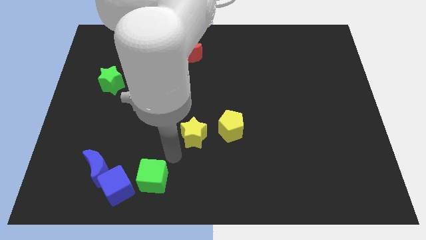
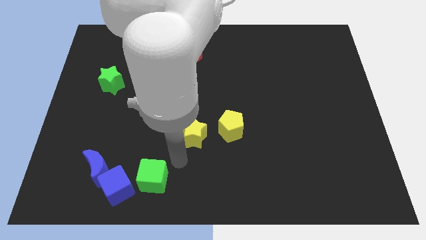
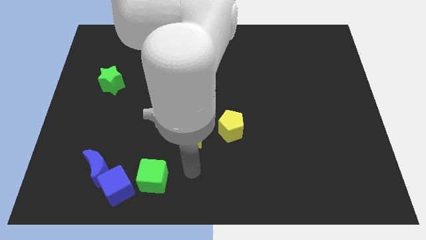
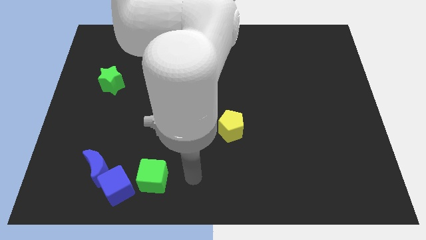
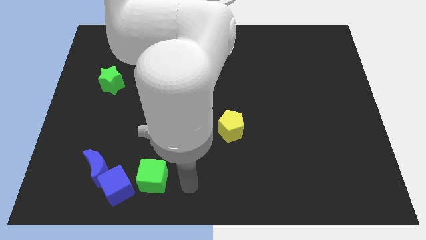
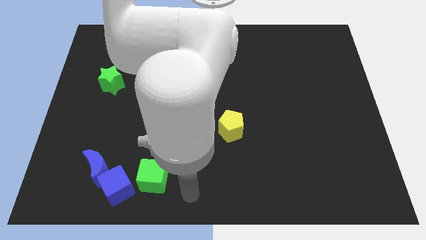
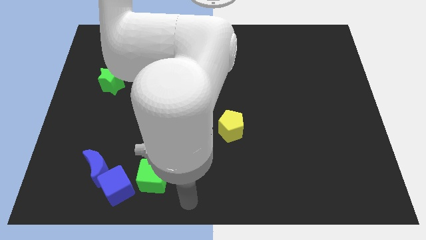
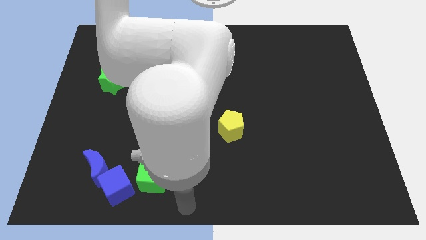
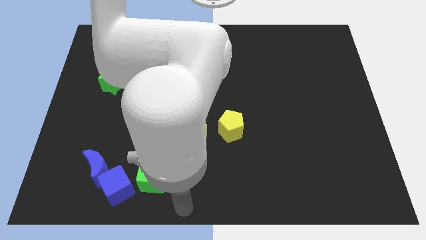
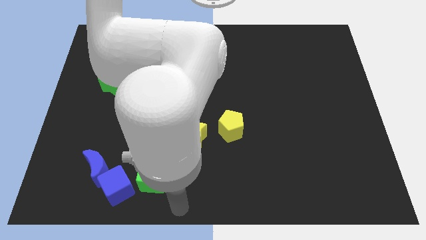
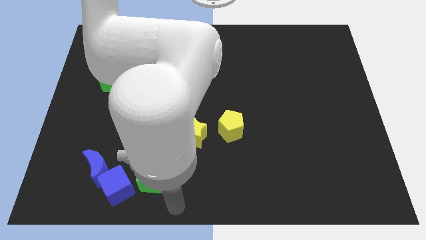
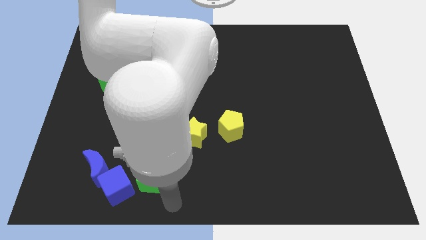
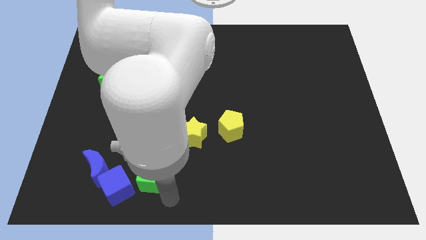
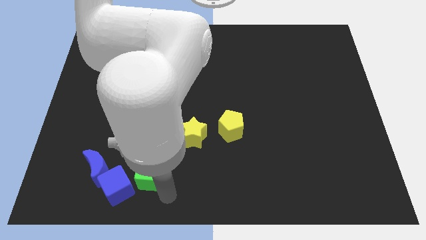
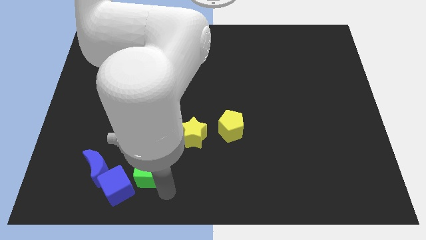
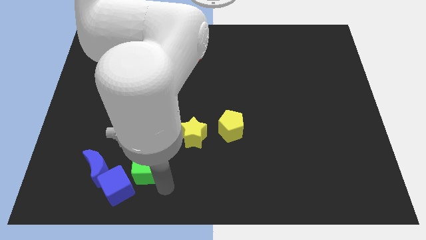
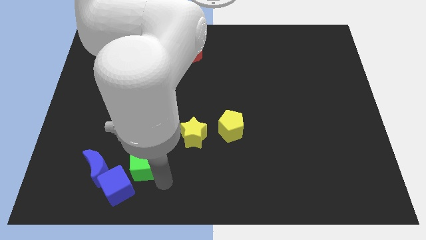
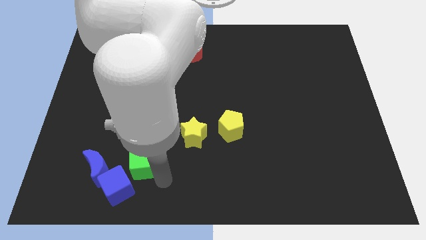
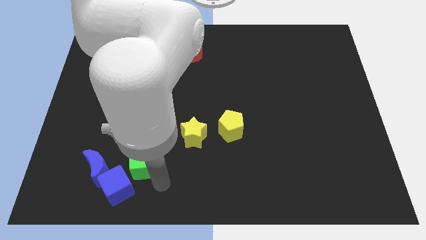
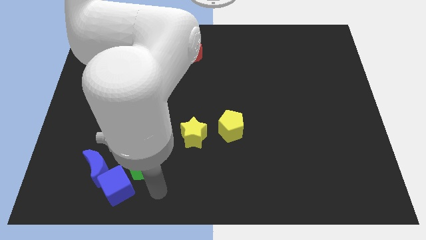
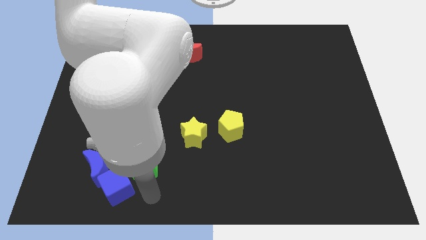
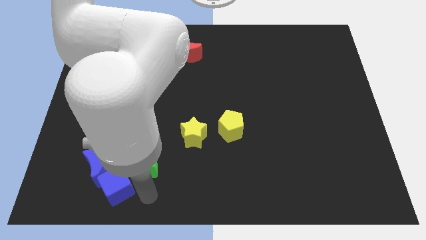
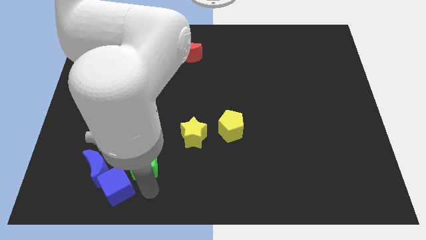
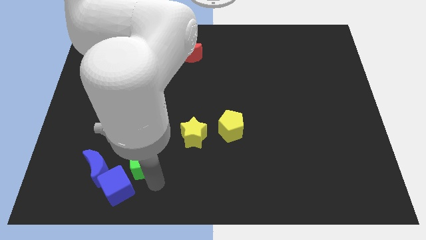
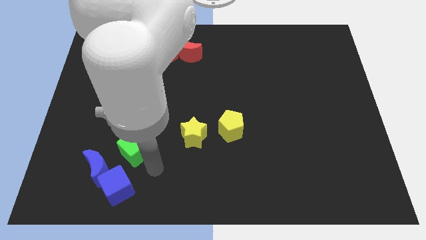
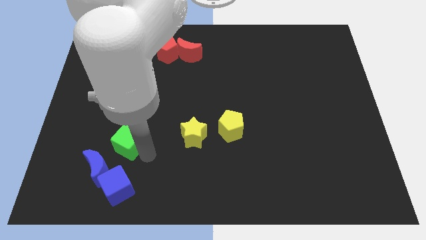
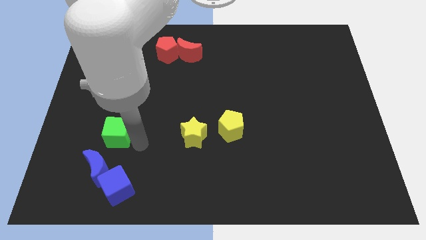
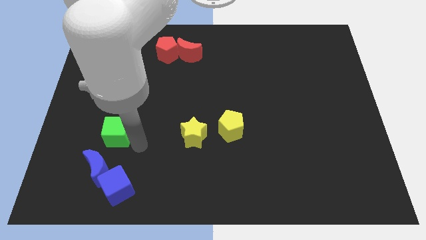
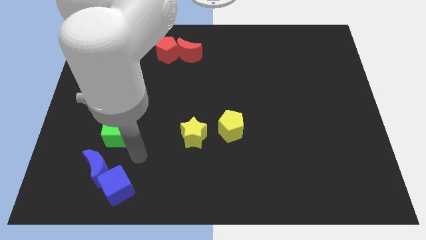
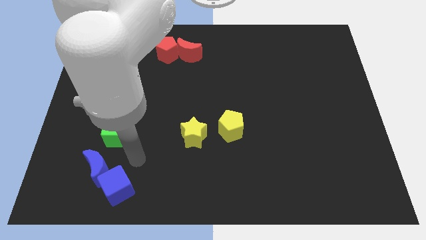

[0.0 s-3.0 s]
place the green cube to the left of the yellow star

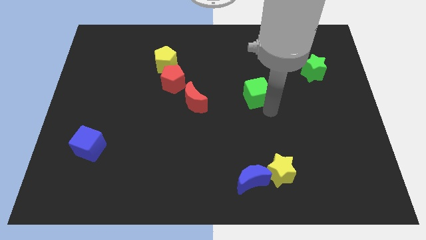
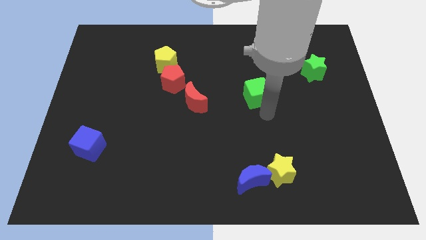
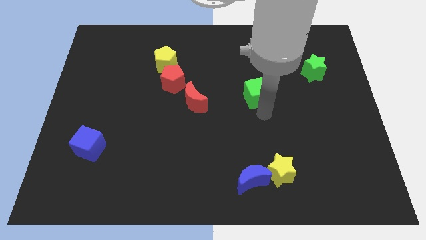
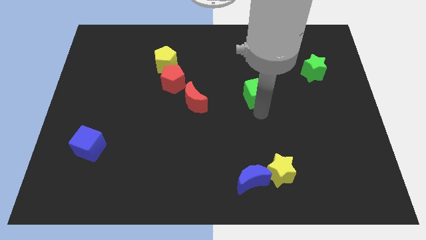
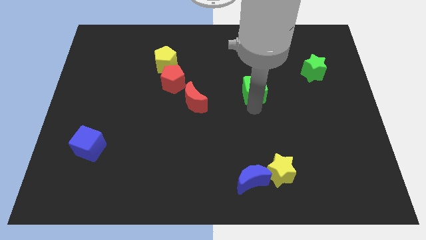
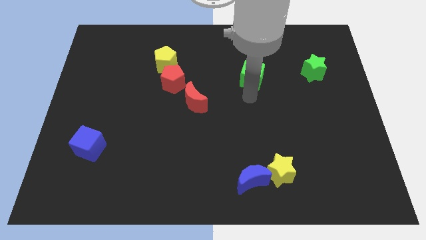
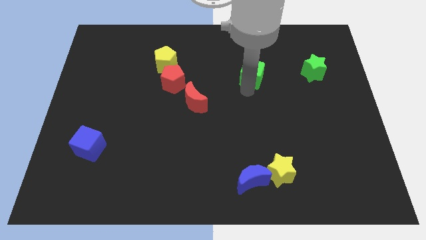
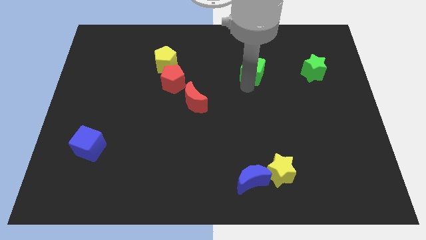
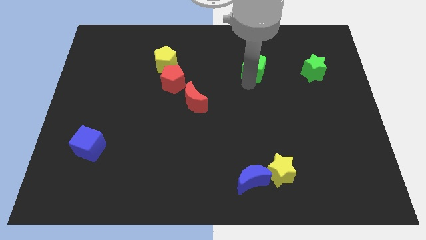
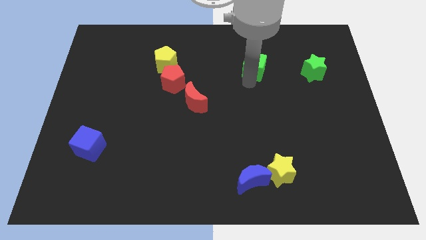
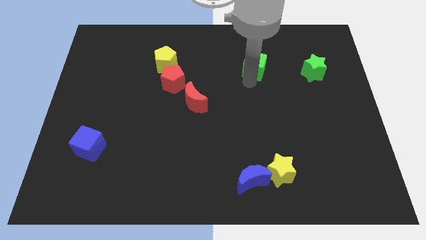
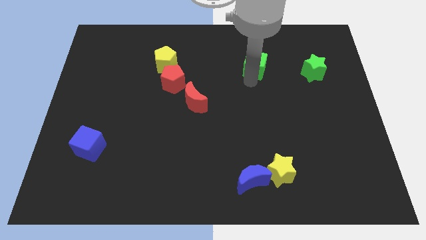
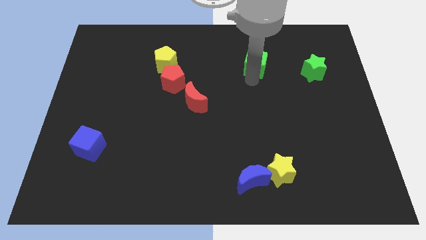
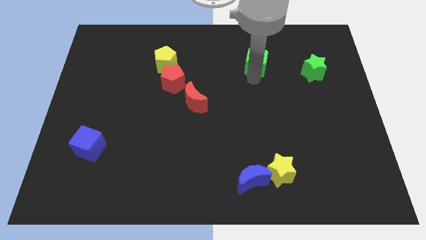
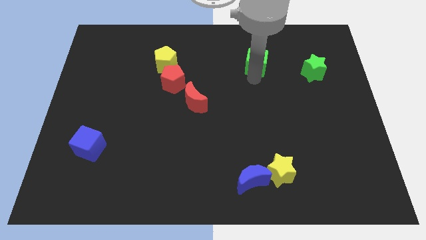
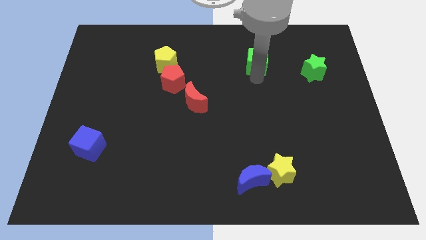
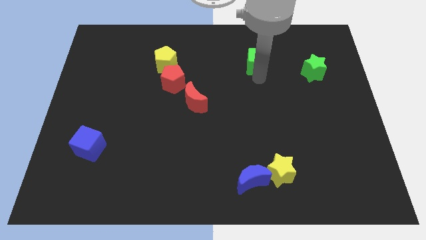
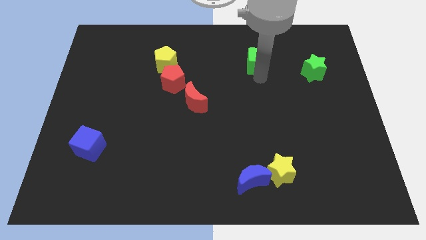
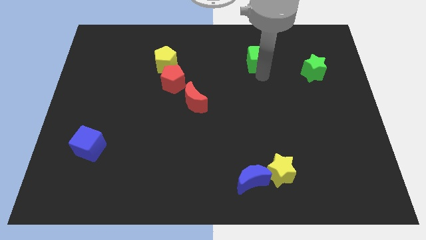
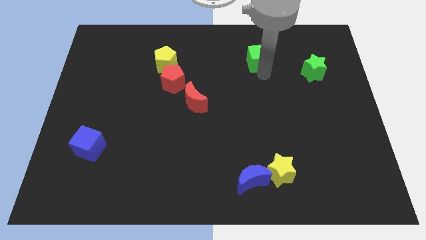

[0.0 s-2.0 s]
push the green cube to the left side of the green star

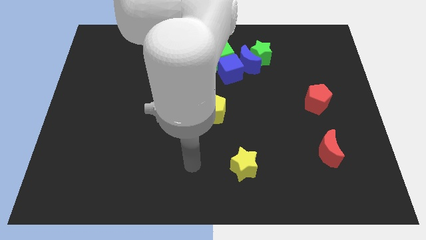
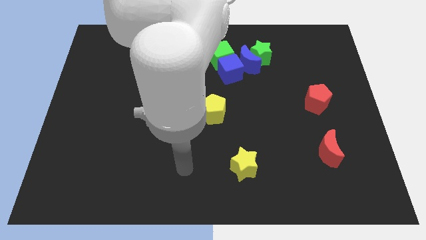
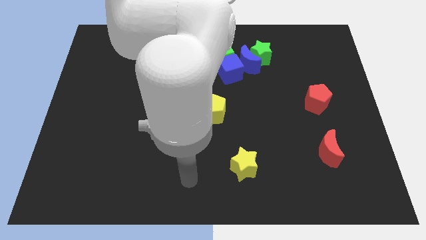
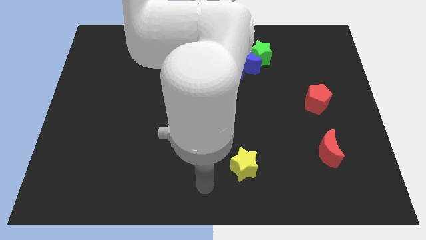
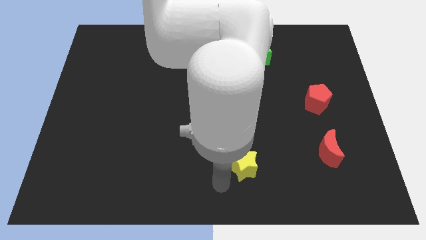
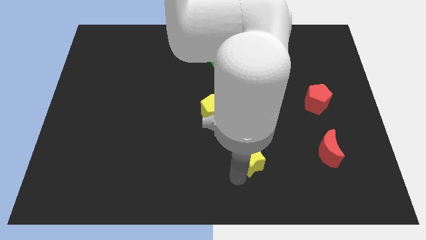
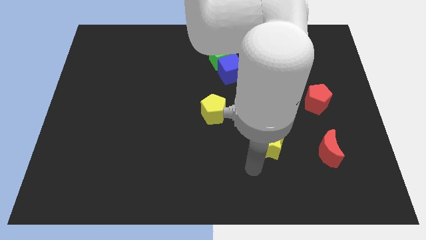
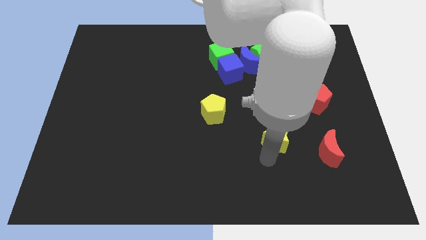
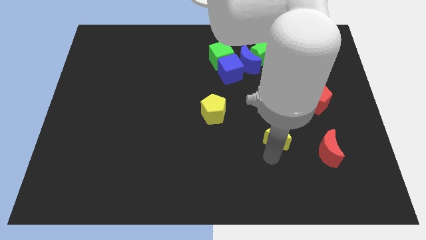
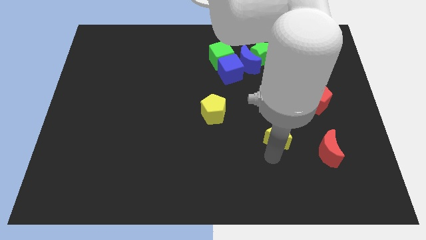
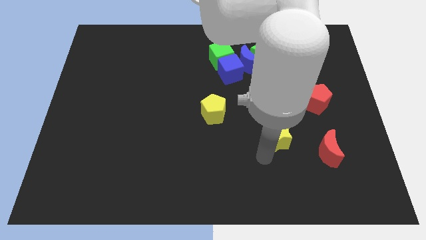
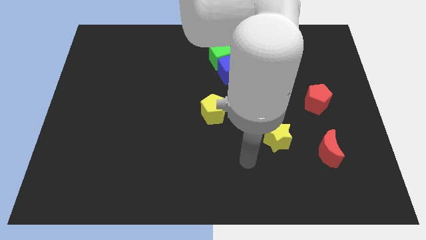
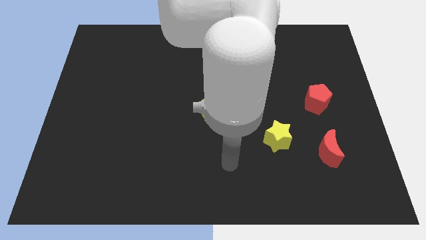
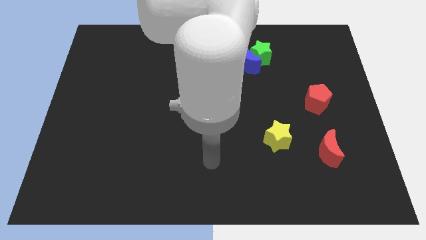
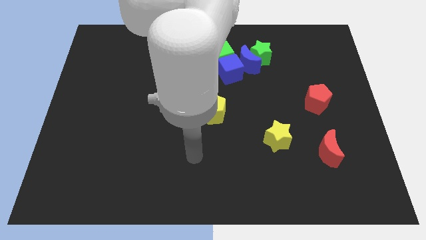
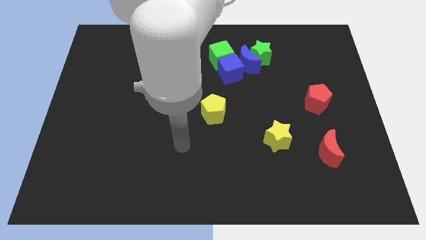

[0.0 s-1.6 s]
move the yellow star diagonally to the red pentagon

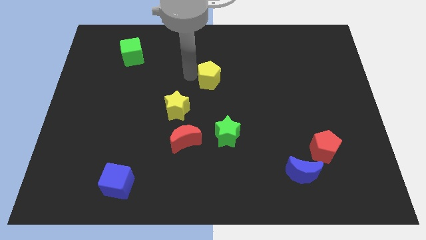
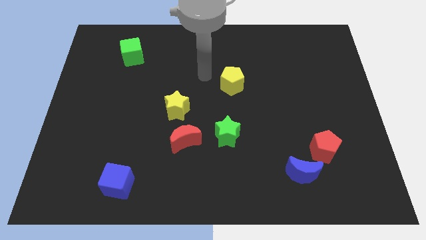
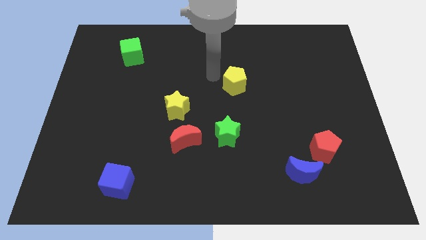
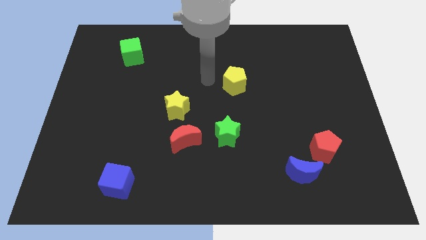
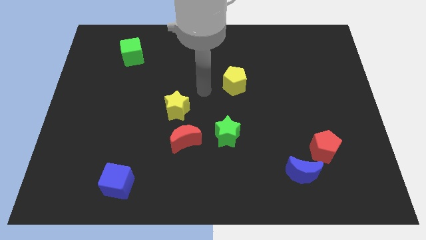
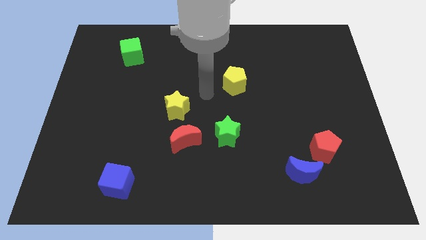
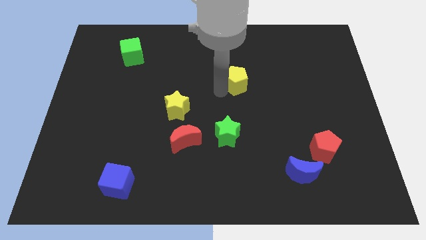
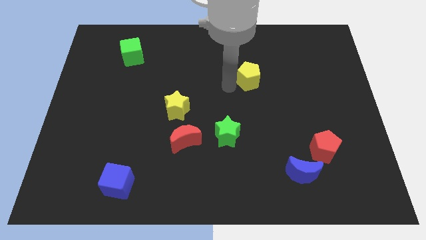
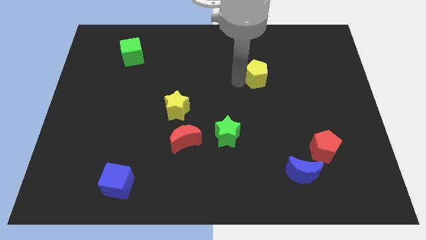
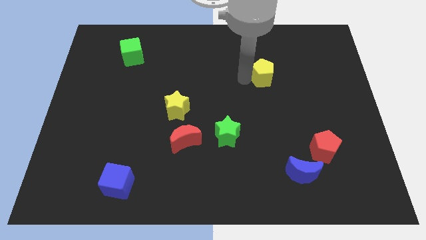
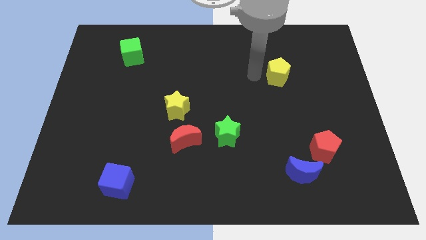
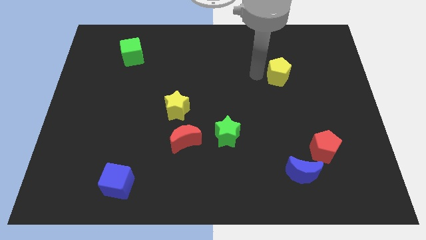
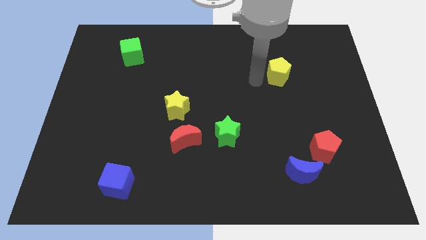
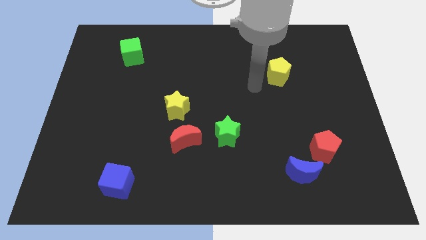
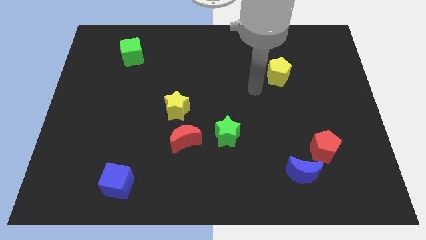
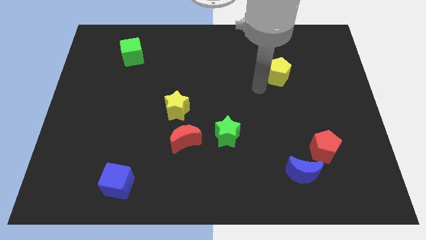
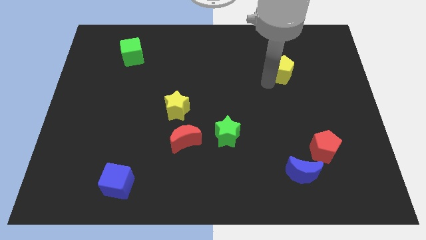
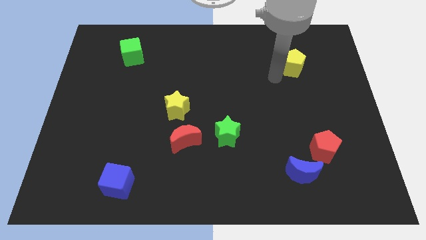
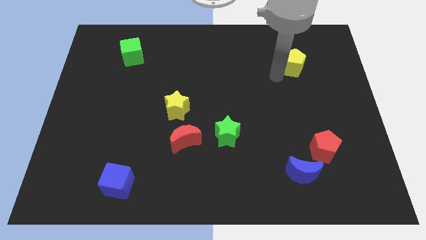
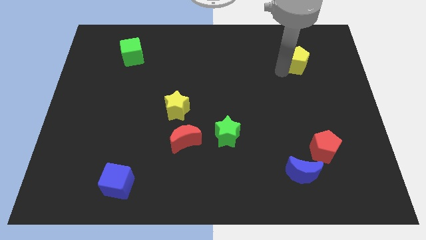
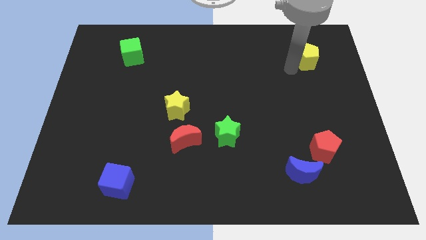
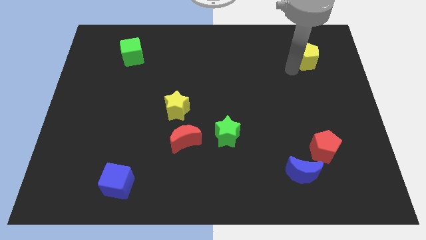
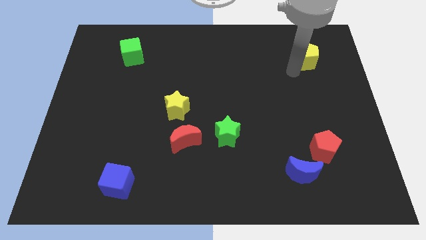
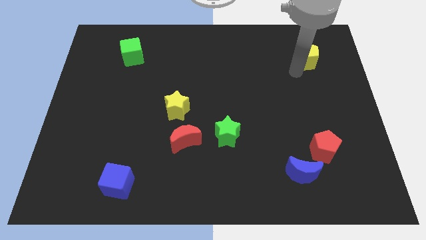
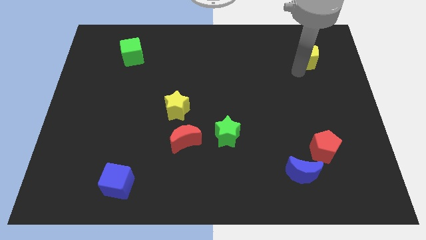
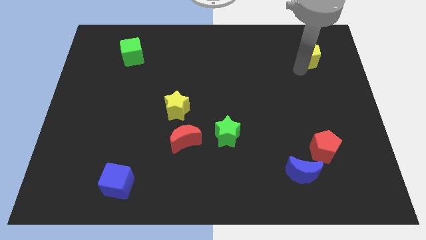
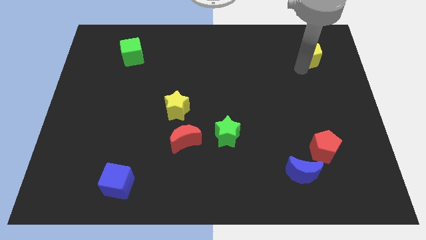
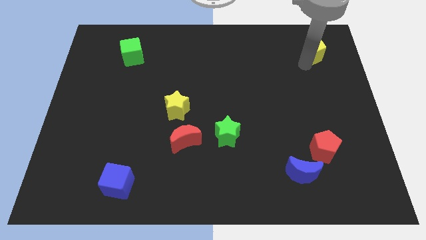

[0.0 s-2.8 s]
move the yellow pentagon to the top of the red pentagon
